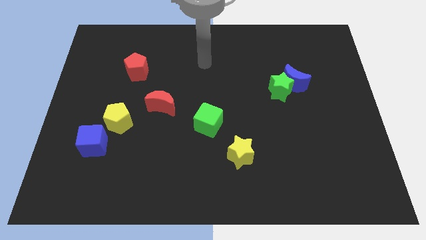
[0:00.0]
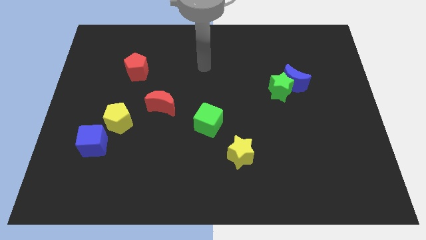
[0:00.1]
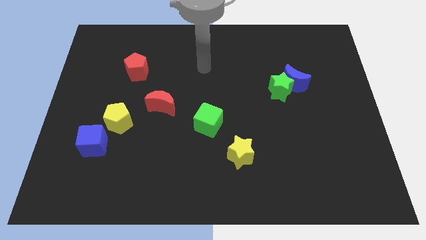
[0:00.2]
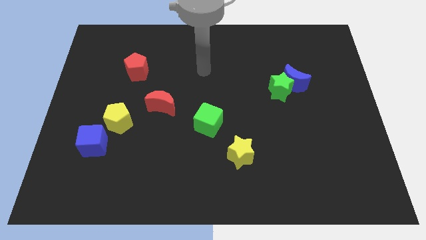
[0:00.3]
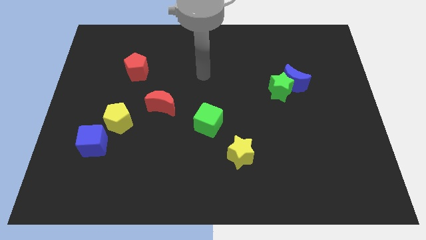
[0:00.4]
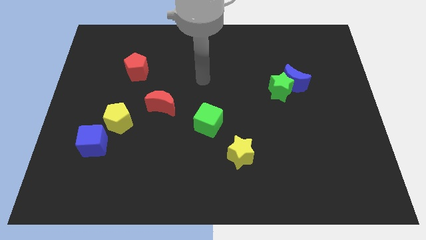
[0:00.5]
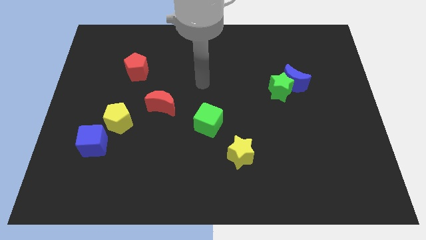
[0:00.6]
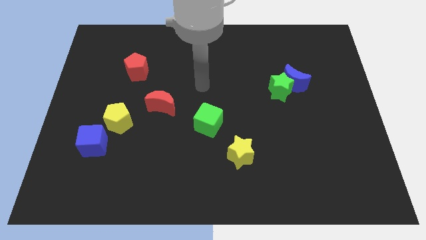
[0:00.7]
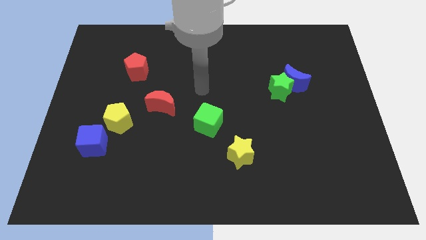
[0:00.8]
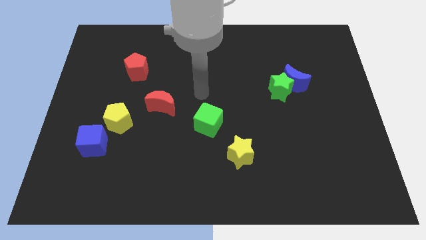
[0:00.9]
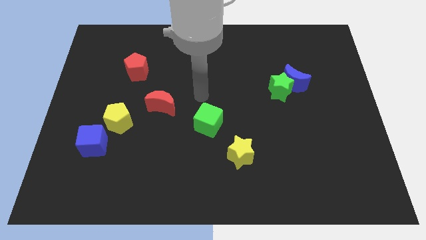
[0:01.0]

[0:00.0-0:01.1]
place your arm at the top of the green cube

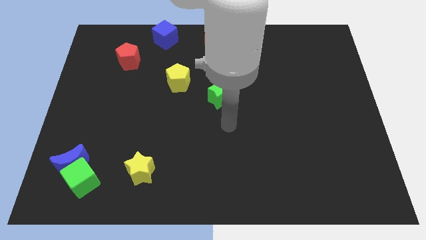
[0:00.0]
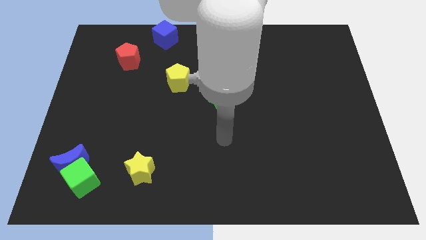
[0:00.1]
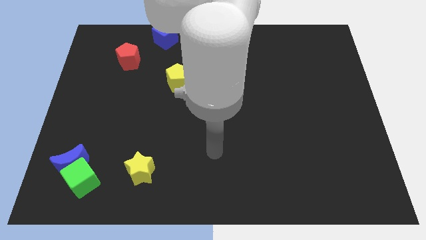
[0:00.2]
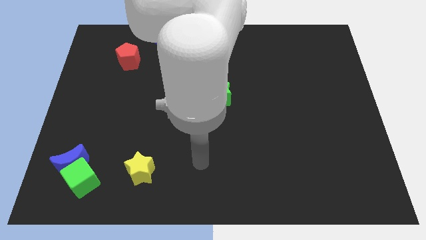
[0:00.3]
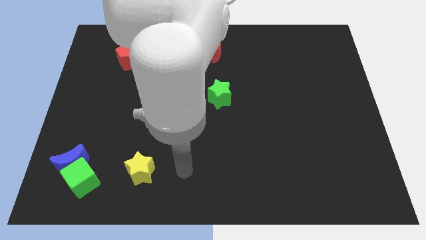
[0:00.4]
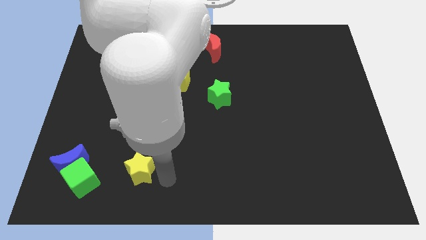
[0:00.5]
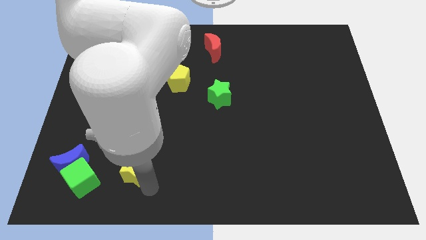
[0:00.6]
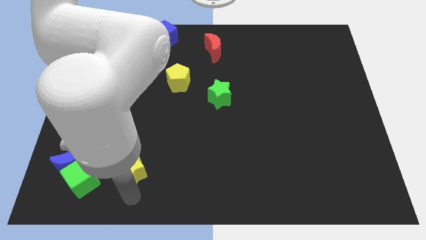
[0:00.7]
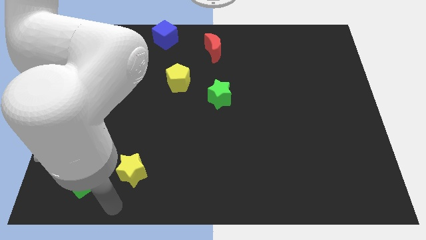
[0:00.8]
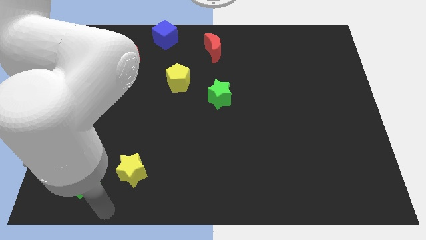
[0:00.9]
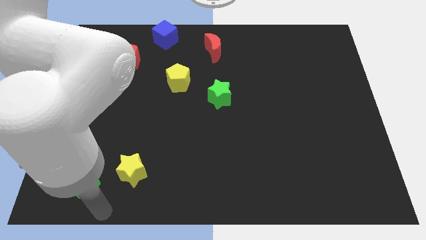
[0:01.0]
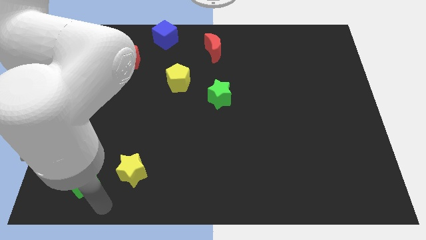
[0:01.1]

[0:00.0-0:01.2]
move your arm away form the green star

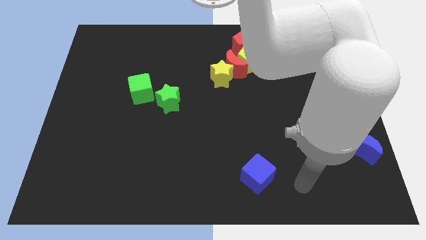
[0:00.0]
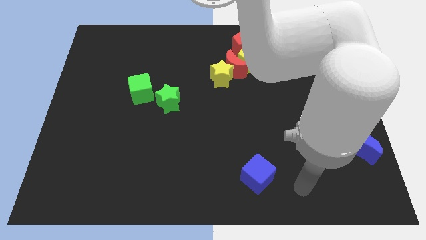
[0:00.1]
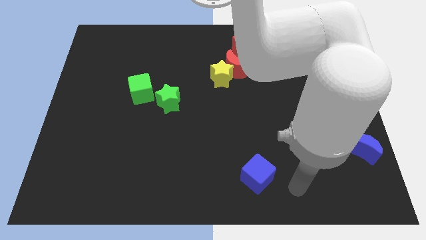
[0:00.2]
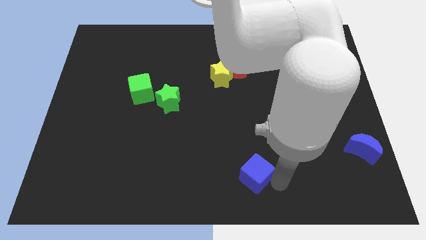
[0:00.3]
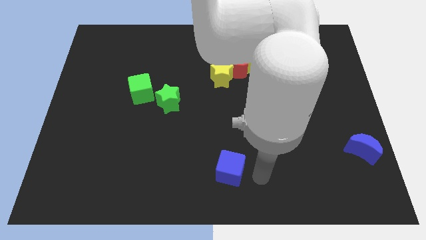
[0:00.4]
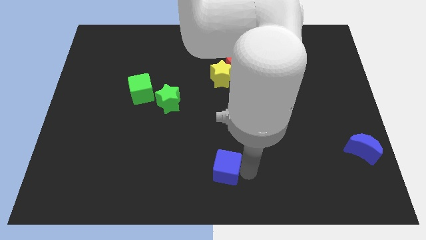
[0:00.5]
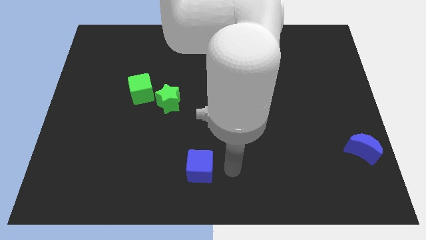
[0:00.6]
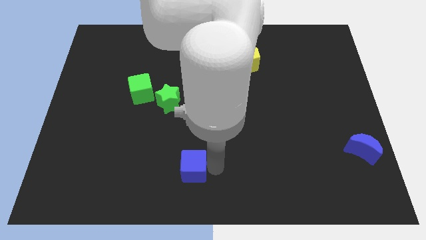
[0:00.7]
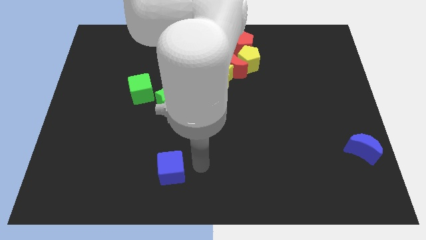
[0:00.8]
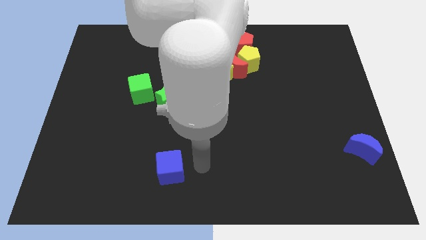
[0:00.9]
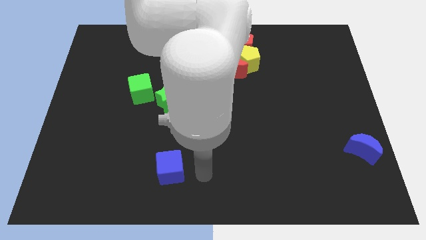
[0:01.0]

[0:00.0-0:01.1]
push the blue cube slightly to the left

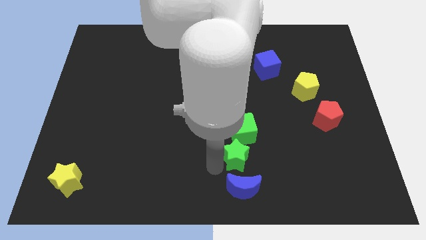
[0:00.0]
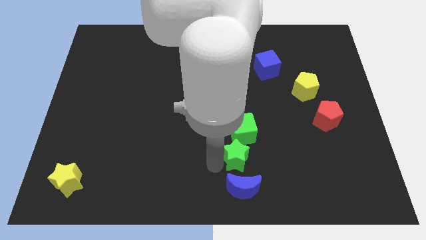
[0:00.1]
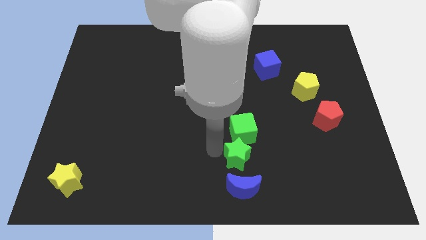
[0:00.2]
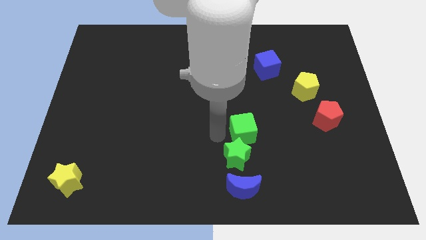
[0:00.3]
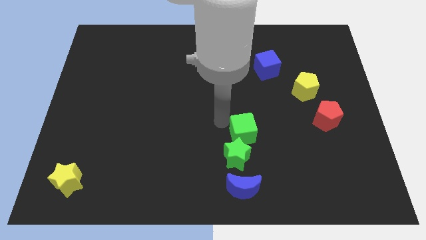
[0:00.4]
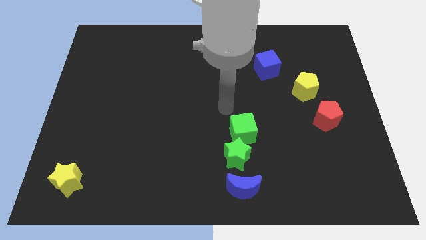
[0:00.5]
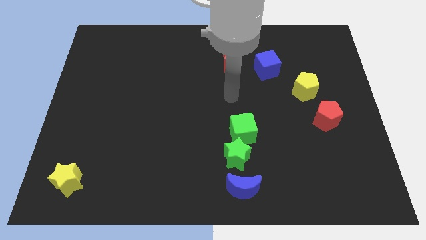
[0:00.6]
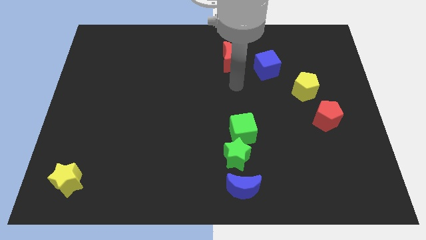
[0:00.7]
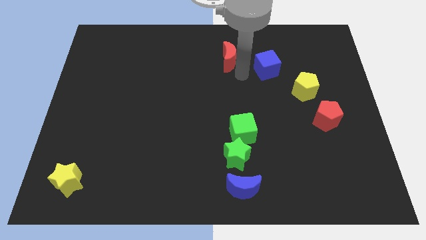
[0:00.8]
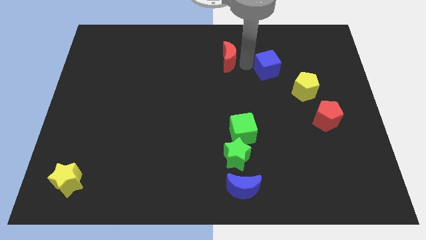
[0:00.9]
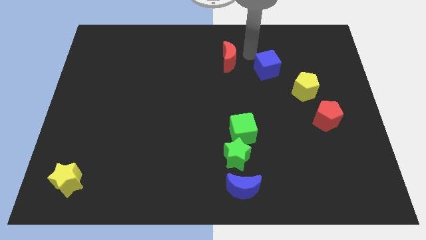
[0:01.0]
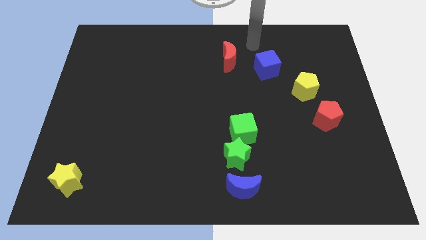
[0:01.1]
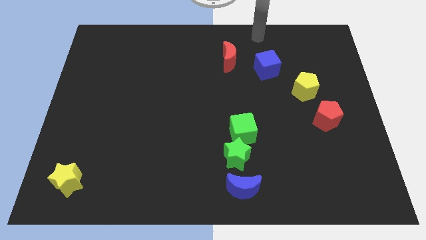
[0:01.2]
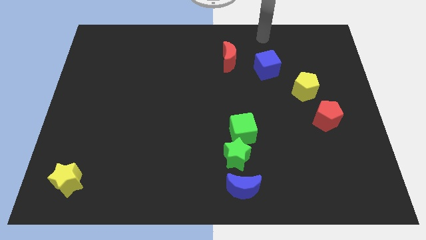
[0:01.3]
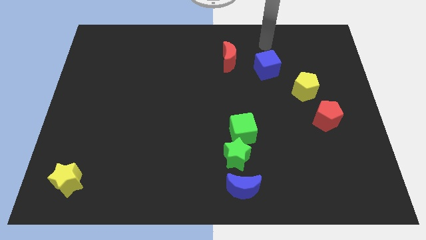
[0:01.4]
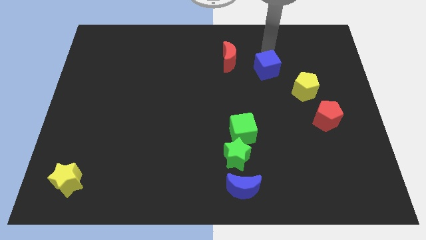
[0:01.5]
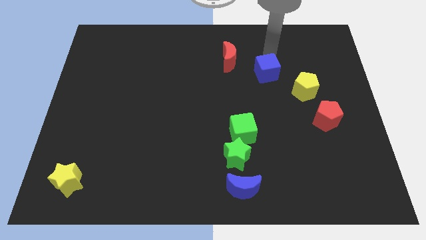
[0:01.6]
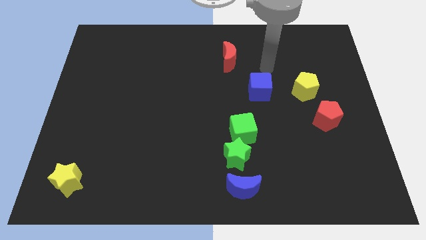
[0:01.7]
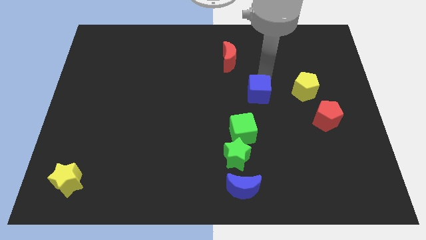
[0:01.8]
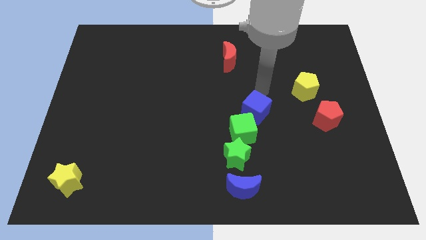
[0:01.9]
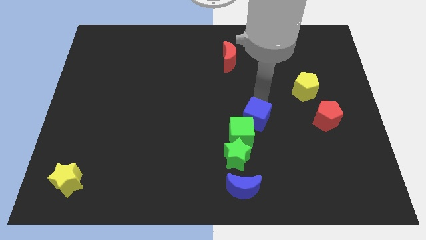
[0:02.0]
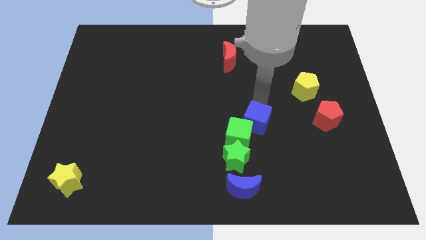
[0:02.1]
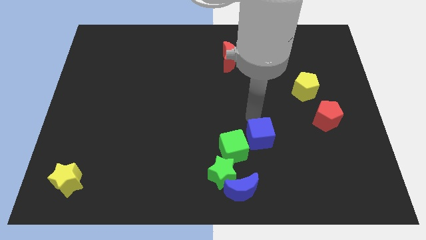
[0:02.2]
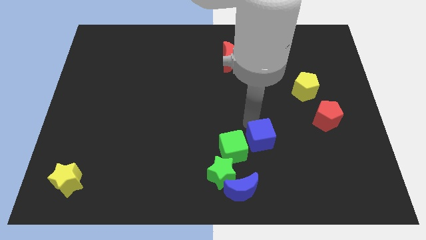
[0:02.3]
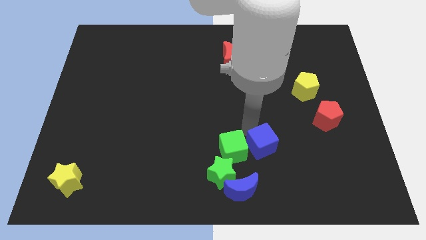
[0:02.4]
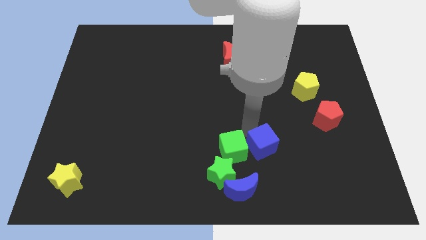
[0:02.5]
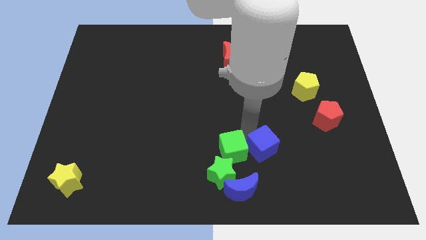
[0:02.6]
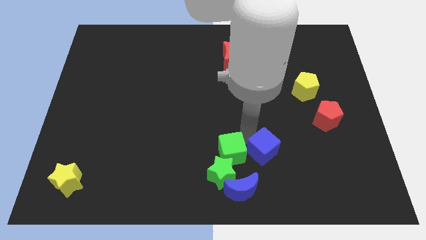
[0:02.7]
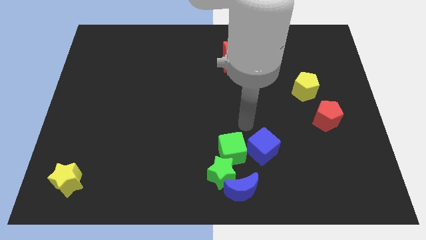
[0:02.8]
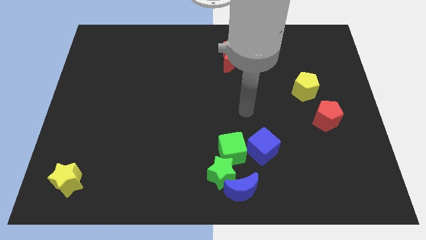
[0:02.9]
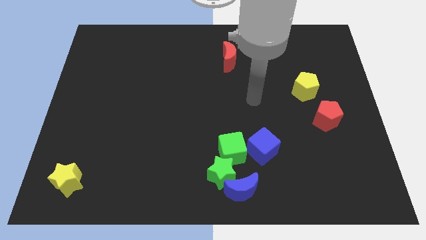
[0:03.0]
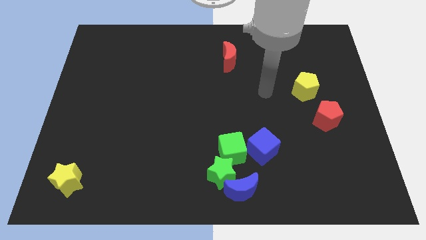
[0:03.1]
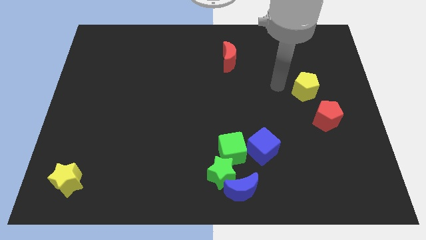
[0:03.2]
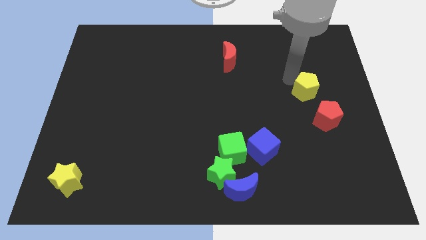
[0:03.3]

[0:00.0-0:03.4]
make group of green and blue blocks

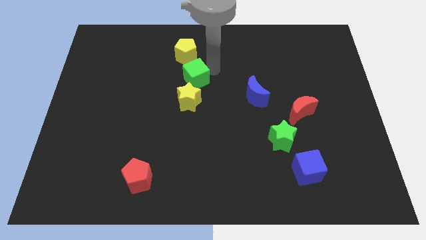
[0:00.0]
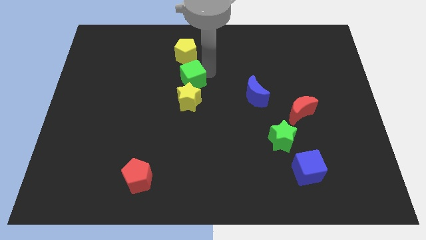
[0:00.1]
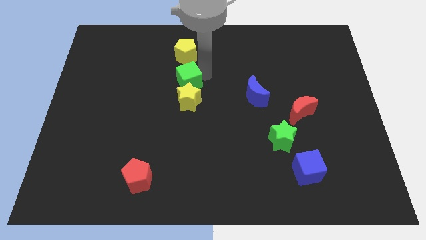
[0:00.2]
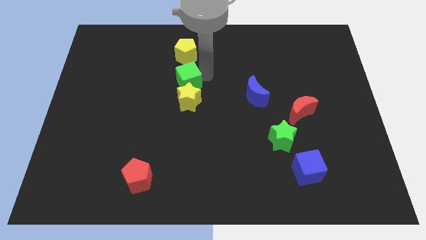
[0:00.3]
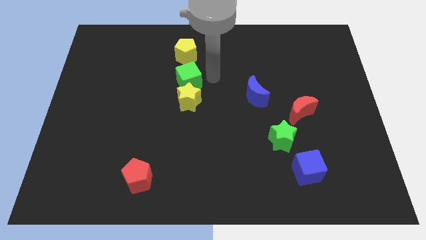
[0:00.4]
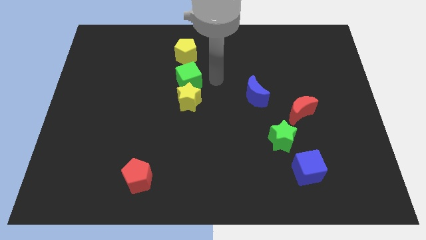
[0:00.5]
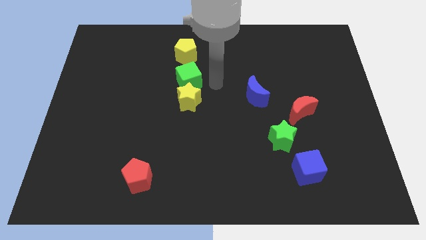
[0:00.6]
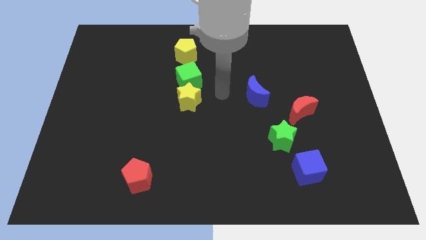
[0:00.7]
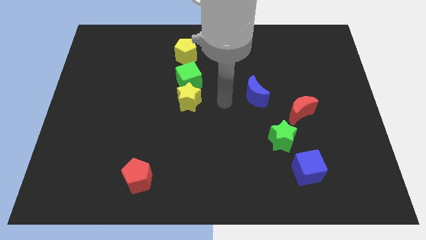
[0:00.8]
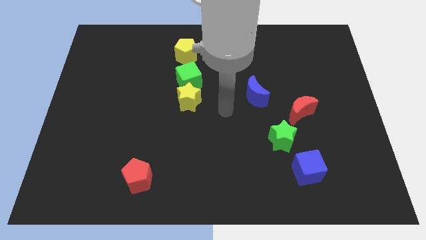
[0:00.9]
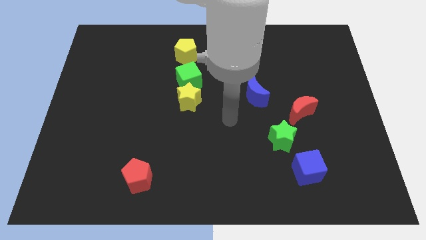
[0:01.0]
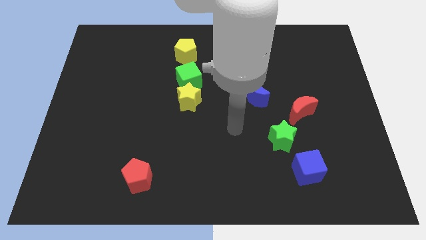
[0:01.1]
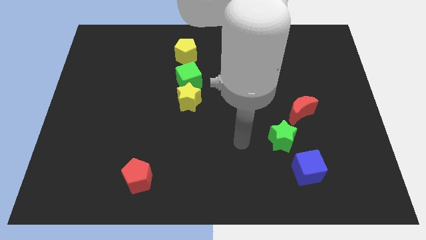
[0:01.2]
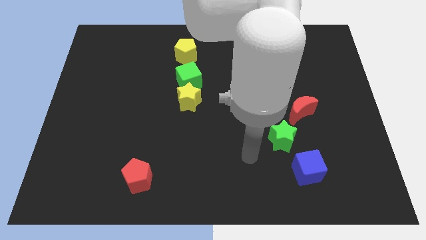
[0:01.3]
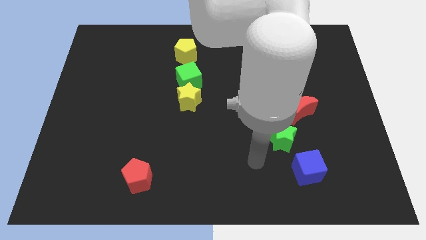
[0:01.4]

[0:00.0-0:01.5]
move the green cube in between the yellow blocks

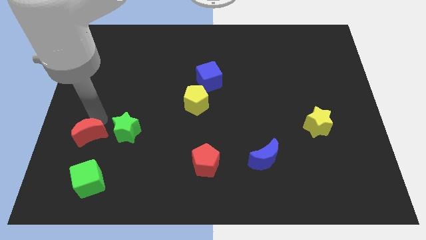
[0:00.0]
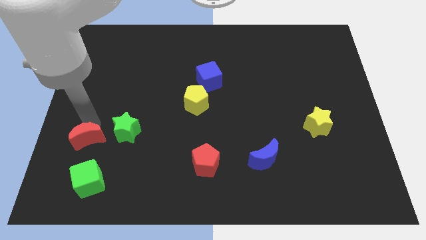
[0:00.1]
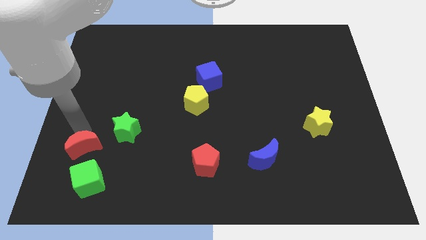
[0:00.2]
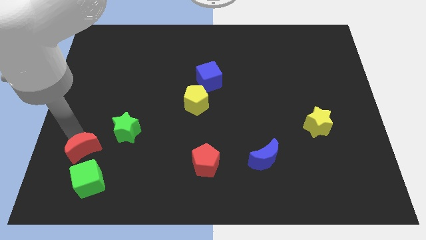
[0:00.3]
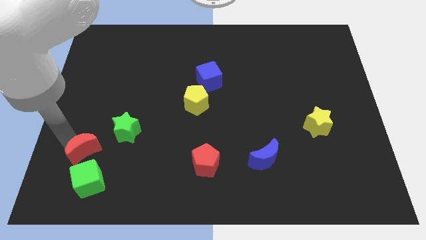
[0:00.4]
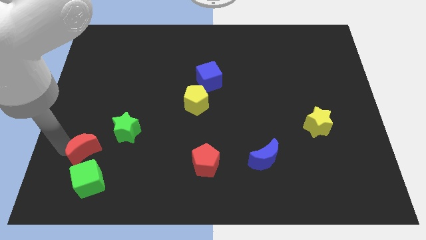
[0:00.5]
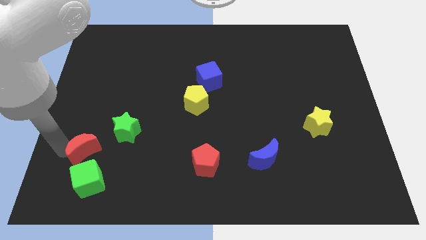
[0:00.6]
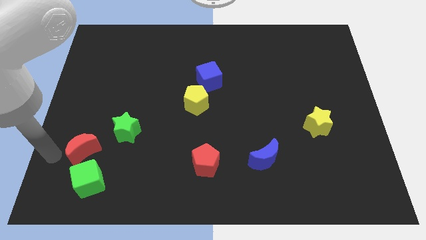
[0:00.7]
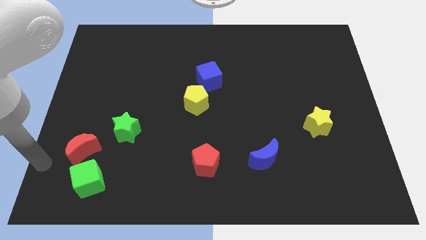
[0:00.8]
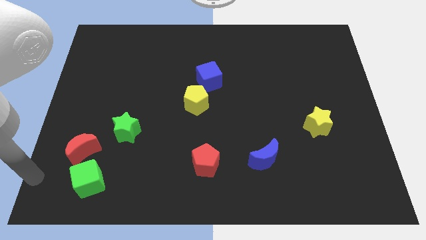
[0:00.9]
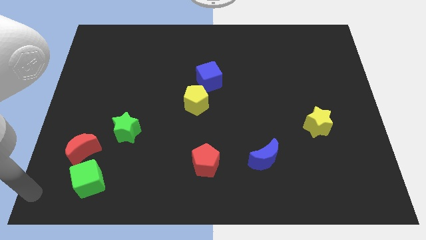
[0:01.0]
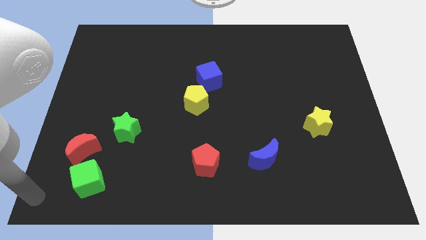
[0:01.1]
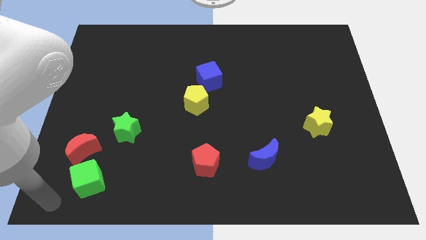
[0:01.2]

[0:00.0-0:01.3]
move the red moon slightly to the bottom
